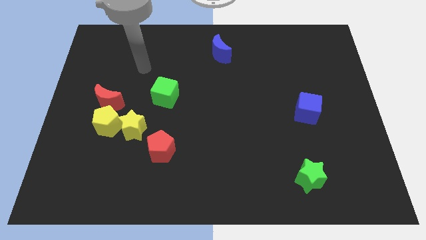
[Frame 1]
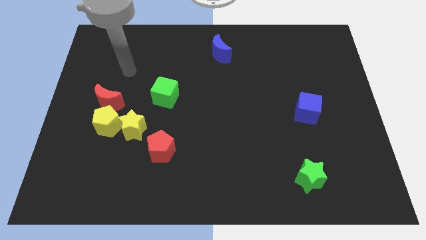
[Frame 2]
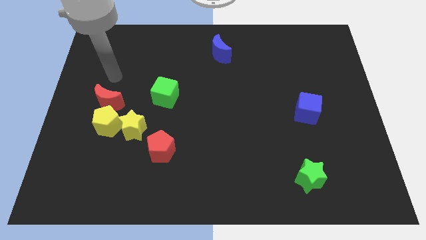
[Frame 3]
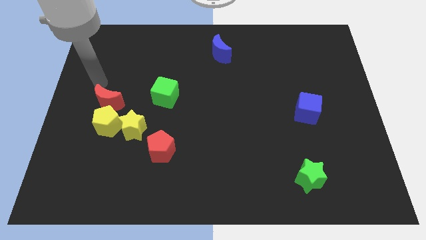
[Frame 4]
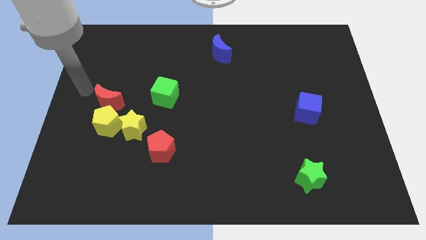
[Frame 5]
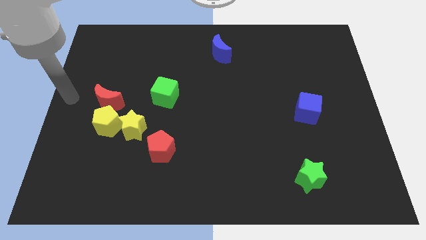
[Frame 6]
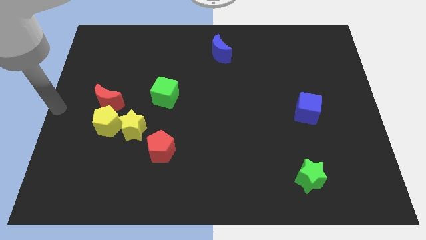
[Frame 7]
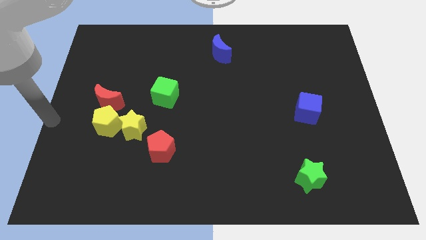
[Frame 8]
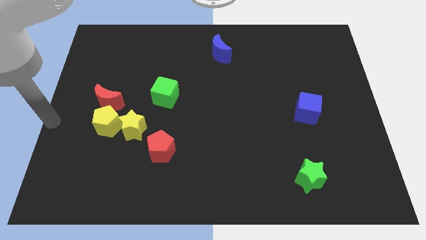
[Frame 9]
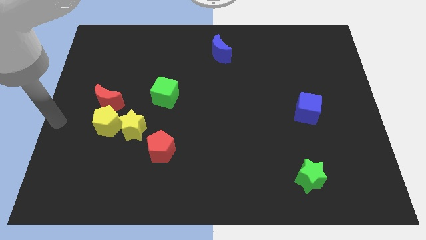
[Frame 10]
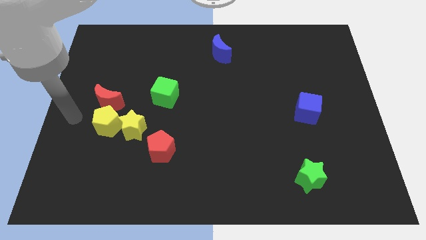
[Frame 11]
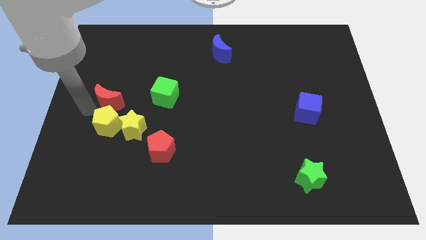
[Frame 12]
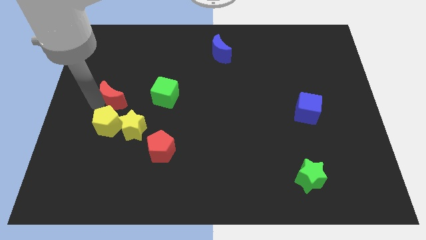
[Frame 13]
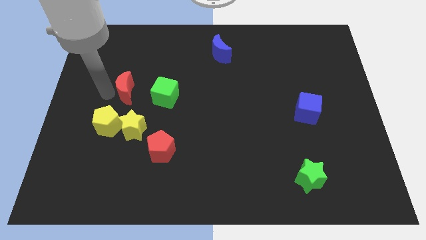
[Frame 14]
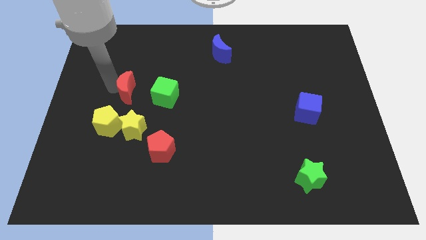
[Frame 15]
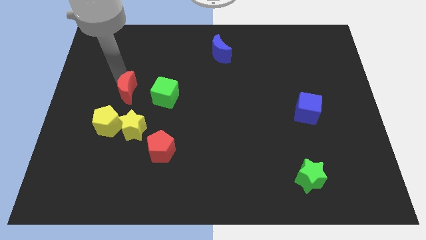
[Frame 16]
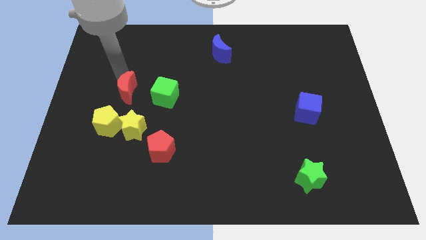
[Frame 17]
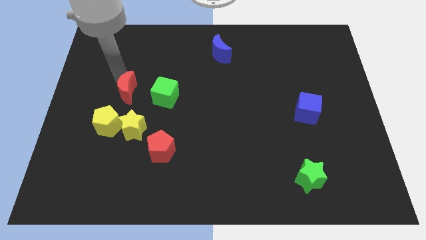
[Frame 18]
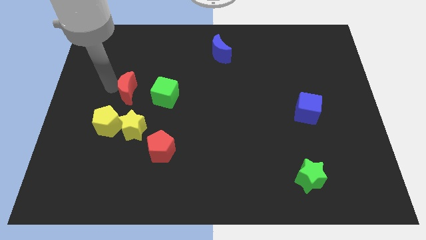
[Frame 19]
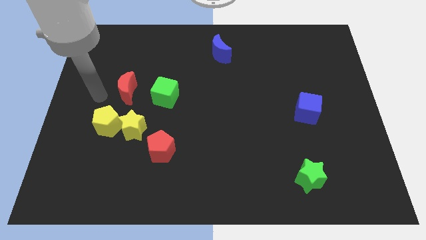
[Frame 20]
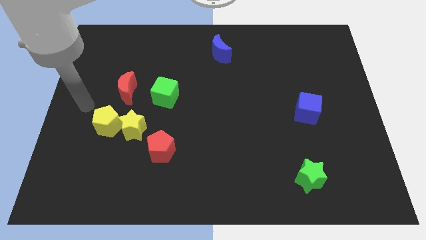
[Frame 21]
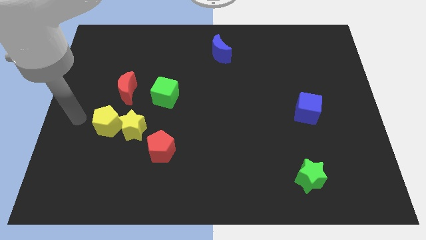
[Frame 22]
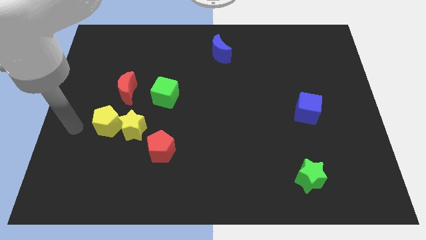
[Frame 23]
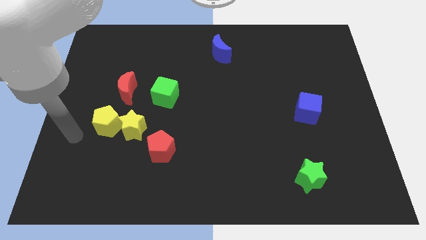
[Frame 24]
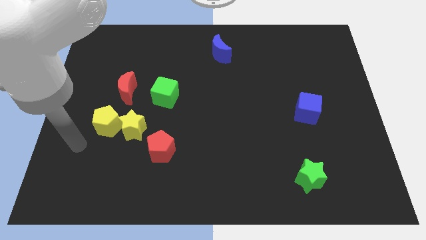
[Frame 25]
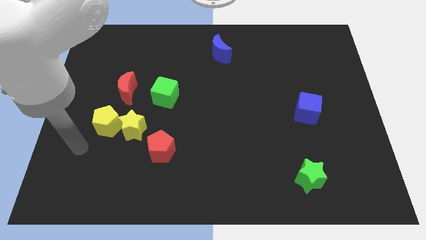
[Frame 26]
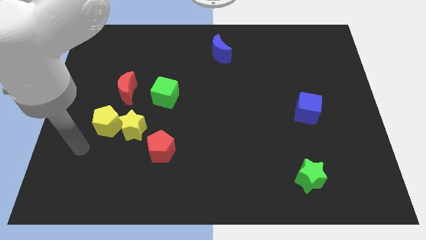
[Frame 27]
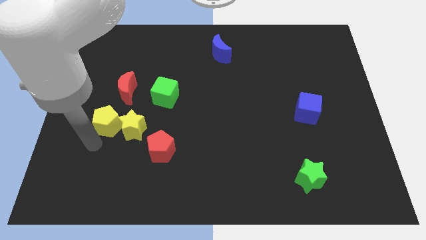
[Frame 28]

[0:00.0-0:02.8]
move the red crescent to the top of the yellow star

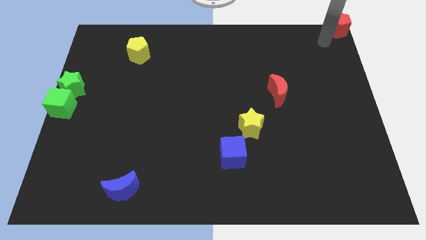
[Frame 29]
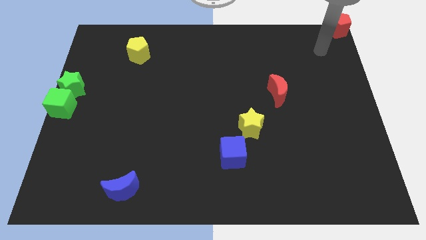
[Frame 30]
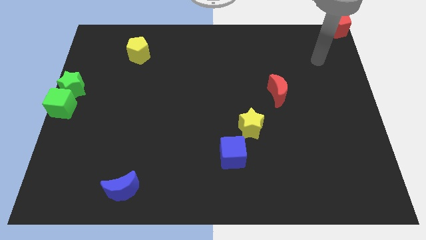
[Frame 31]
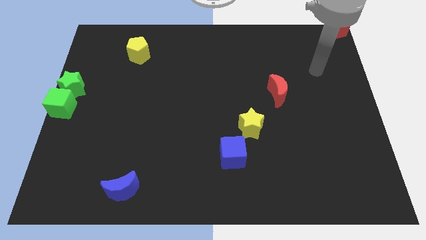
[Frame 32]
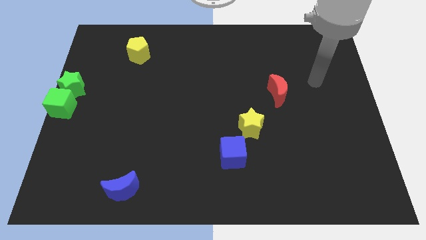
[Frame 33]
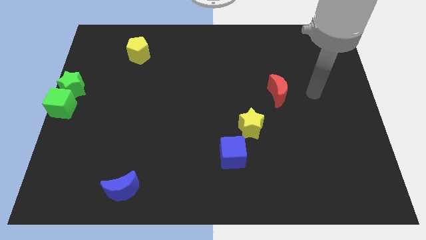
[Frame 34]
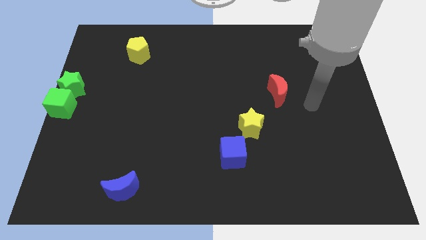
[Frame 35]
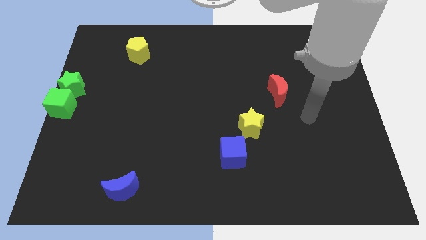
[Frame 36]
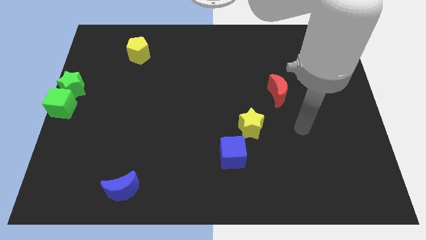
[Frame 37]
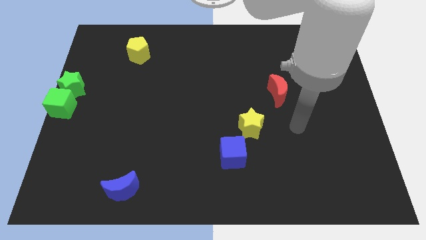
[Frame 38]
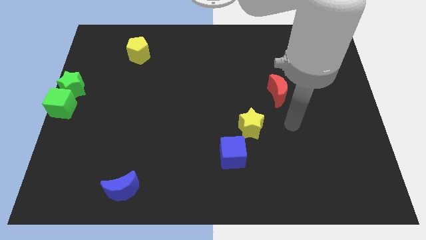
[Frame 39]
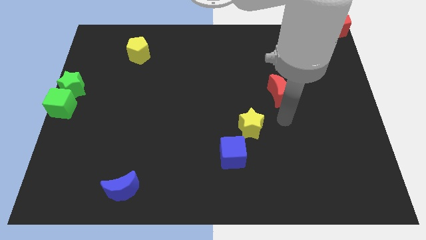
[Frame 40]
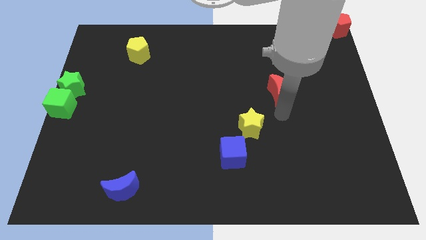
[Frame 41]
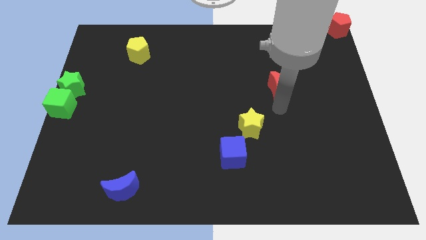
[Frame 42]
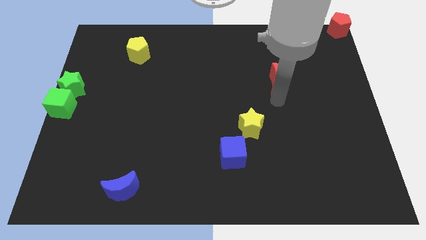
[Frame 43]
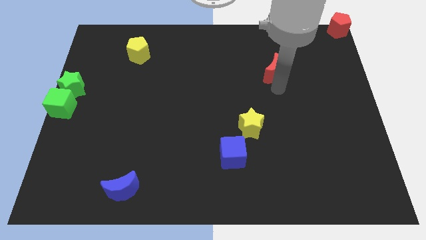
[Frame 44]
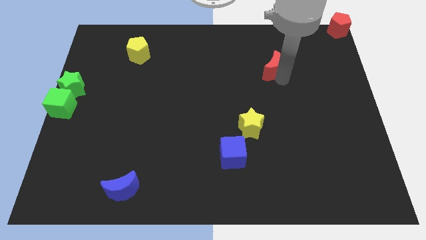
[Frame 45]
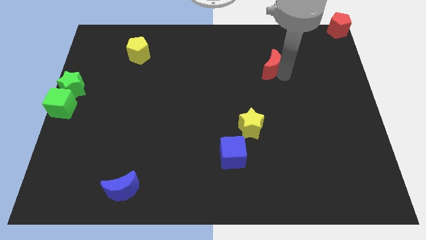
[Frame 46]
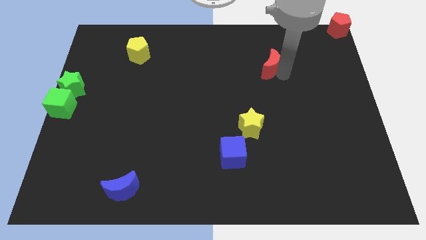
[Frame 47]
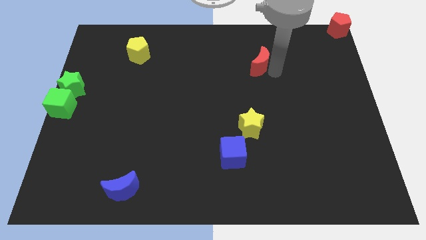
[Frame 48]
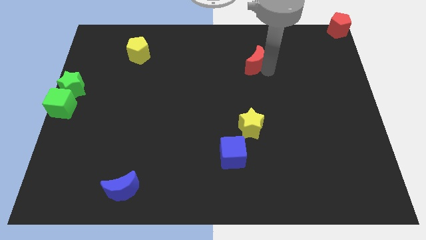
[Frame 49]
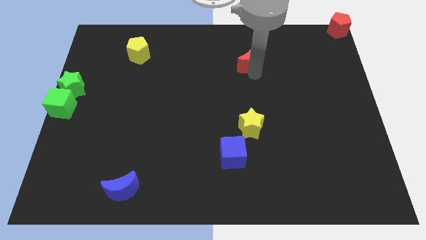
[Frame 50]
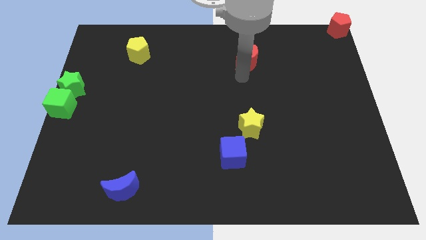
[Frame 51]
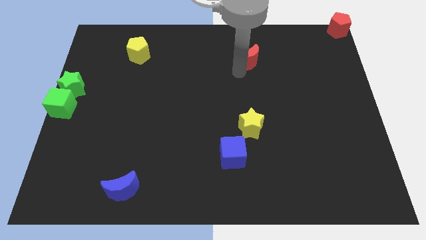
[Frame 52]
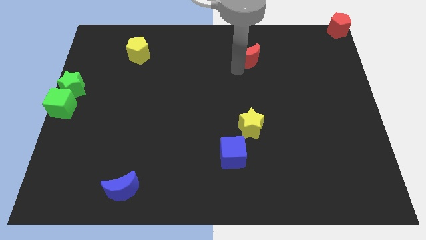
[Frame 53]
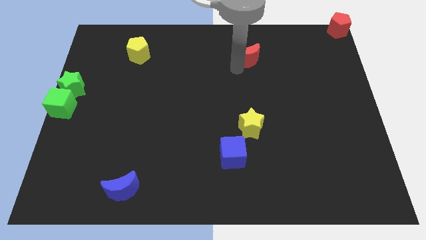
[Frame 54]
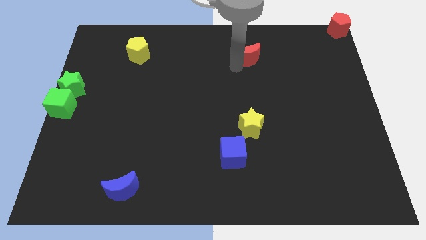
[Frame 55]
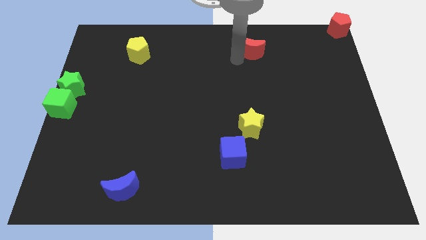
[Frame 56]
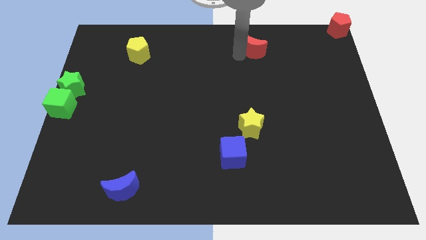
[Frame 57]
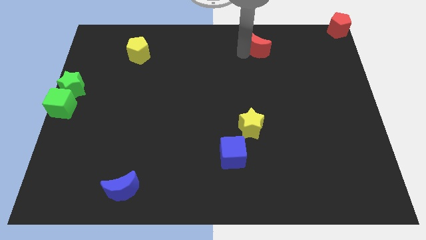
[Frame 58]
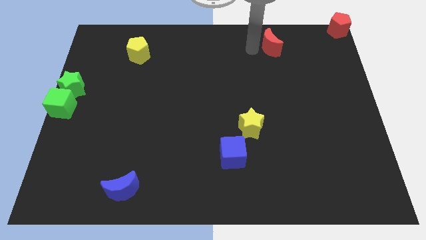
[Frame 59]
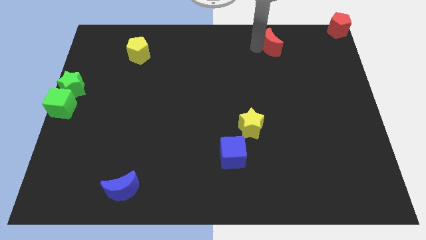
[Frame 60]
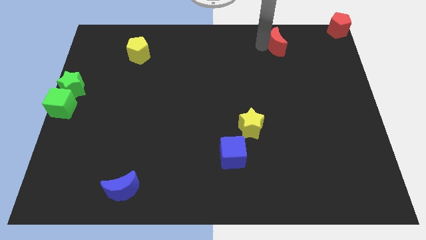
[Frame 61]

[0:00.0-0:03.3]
push red crescent towards the top

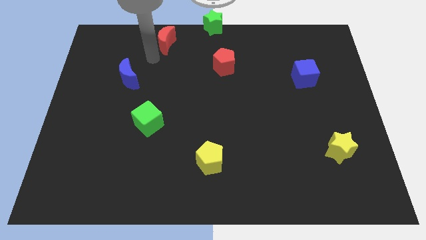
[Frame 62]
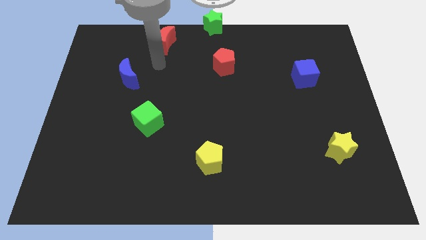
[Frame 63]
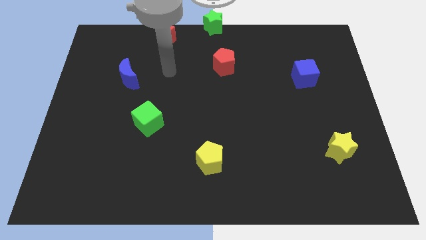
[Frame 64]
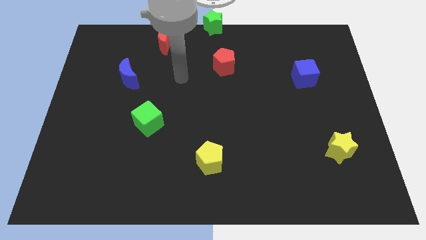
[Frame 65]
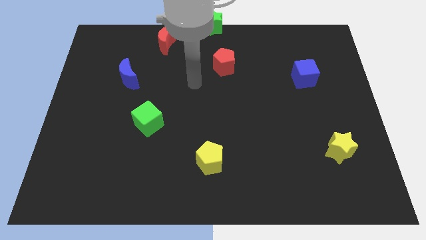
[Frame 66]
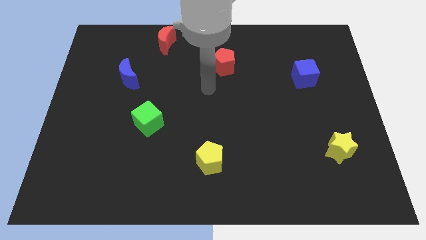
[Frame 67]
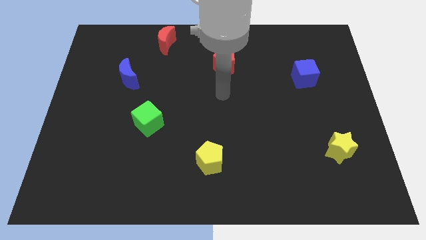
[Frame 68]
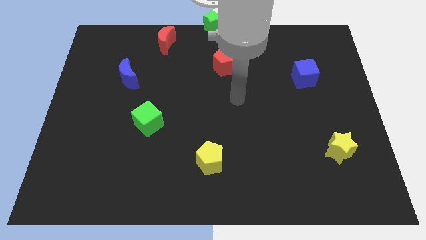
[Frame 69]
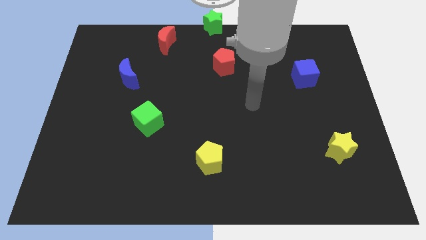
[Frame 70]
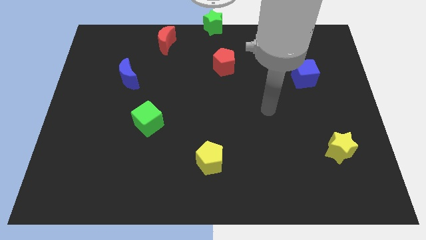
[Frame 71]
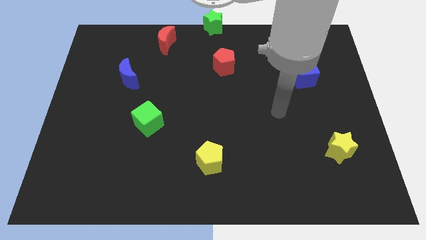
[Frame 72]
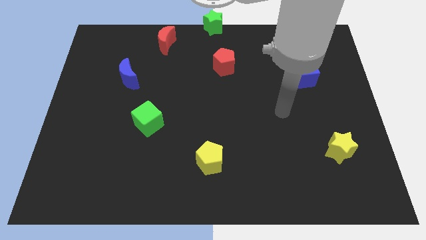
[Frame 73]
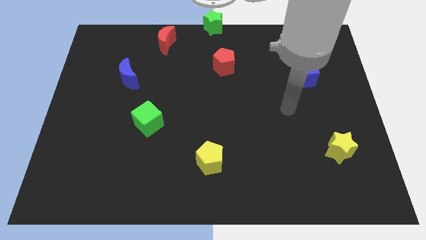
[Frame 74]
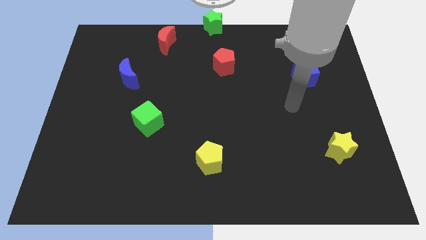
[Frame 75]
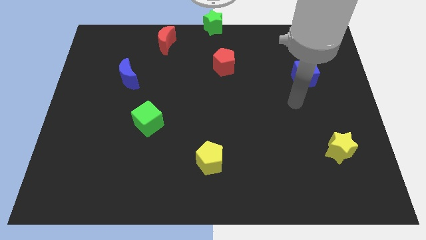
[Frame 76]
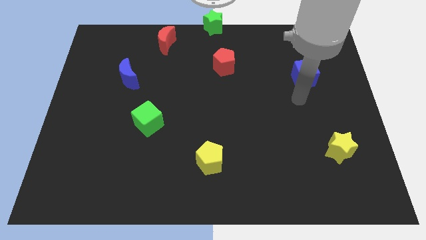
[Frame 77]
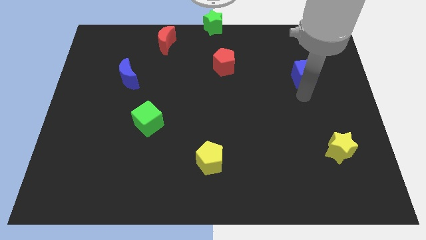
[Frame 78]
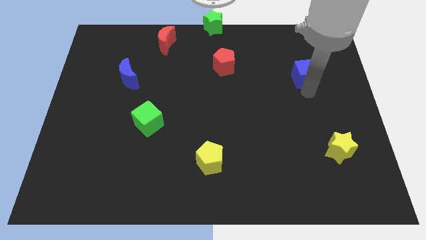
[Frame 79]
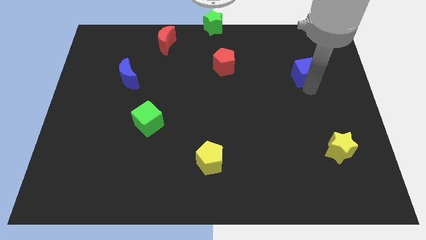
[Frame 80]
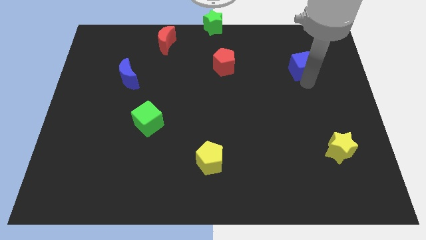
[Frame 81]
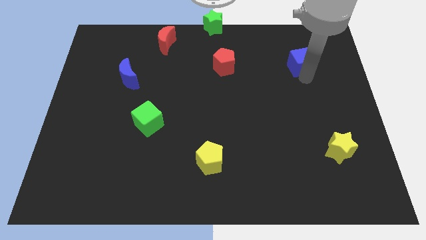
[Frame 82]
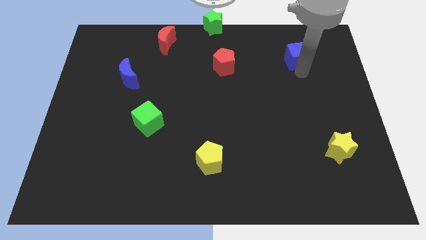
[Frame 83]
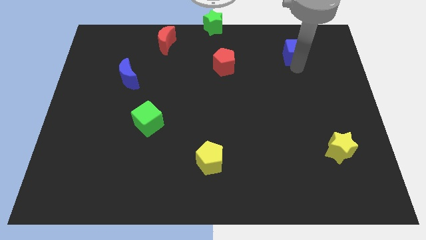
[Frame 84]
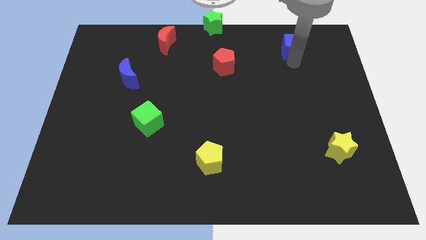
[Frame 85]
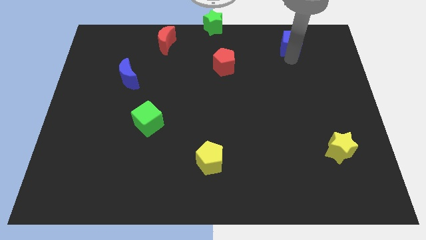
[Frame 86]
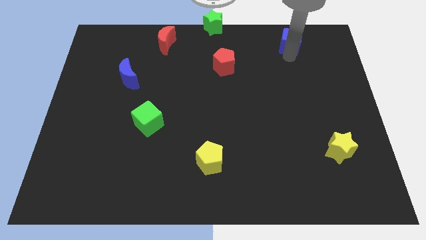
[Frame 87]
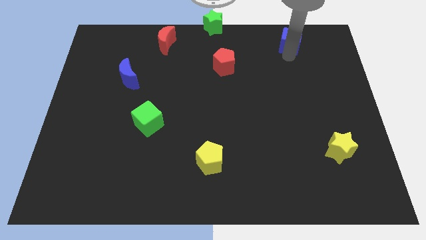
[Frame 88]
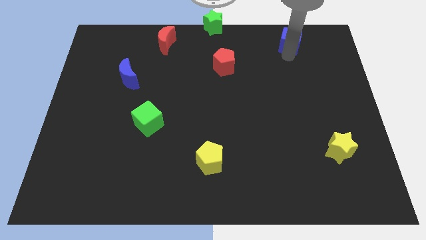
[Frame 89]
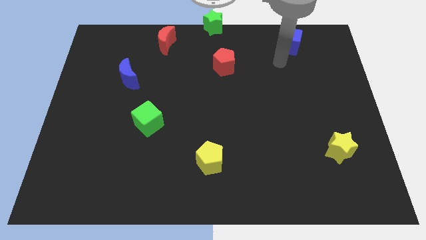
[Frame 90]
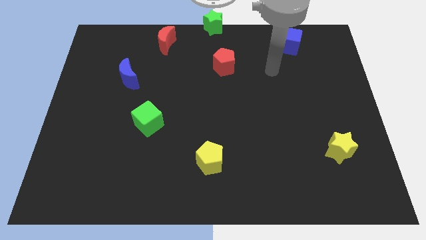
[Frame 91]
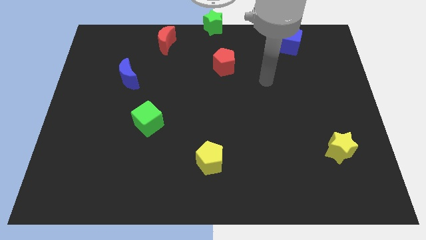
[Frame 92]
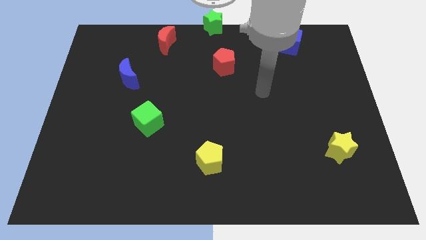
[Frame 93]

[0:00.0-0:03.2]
put the blue cube parallel to the red moon
